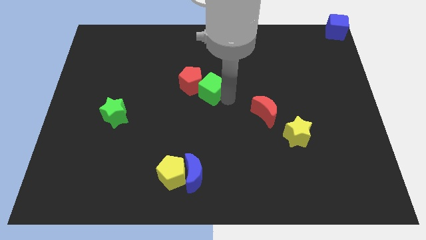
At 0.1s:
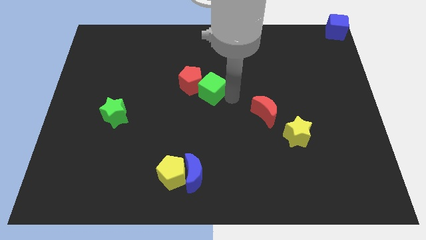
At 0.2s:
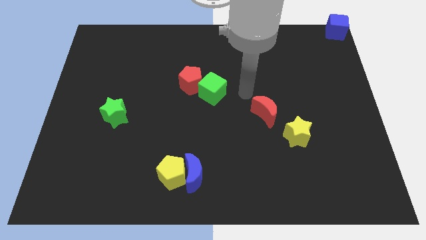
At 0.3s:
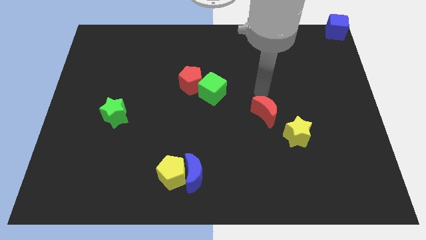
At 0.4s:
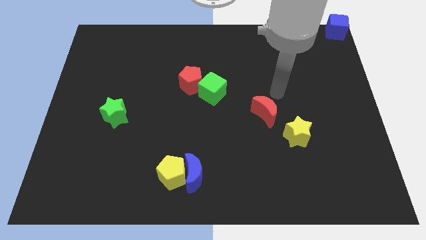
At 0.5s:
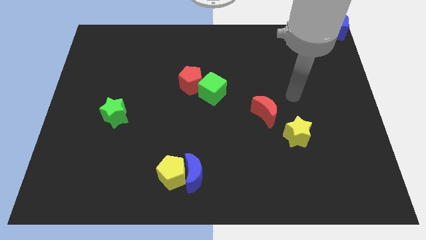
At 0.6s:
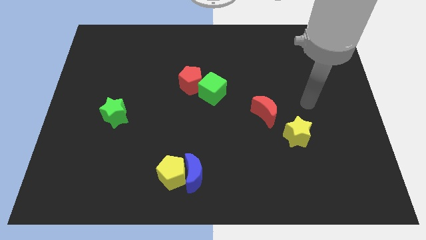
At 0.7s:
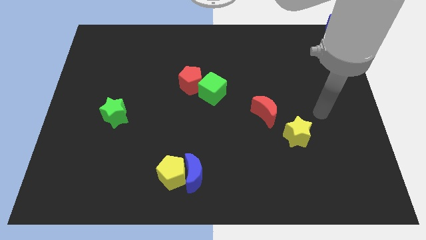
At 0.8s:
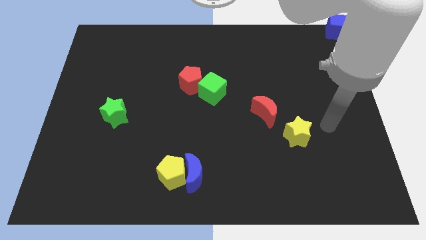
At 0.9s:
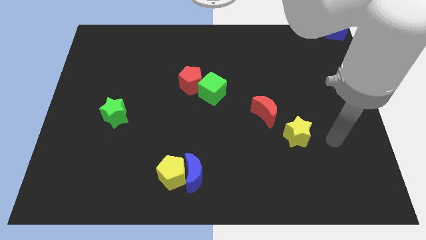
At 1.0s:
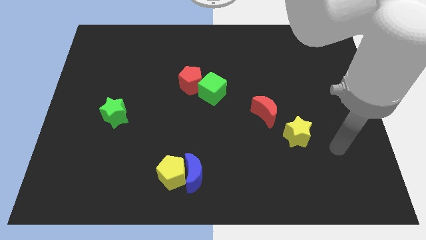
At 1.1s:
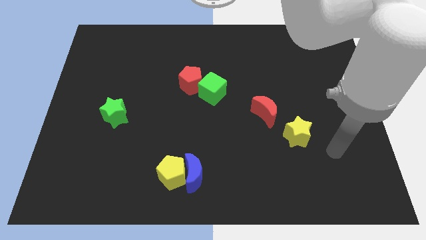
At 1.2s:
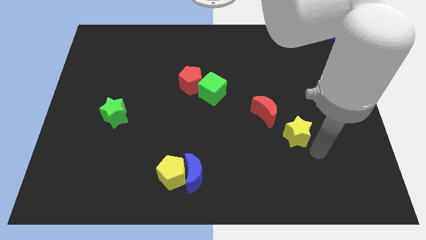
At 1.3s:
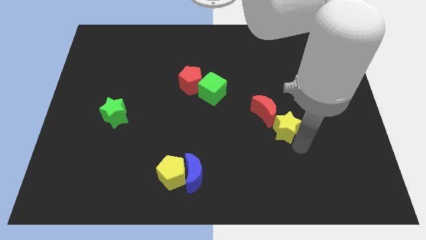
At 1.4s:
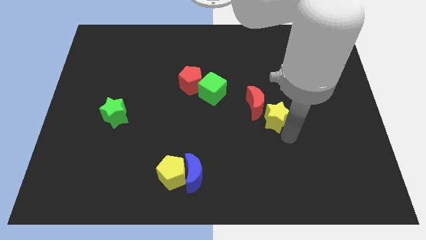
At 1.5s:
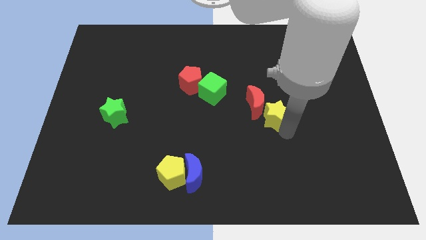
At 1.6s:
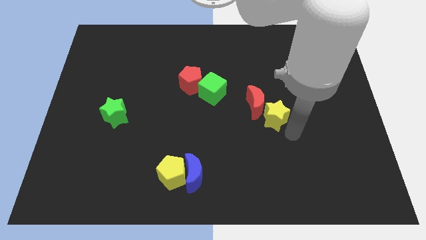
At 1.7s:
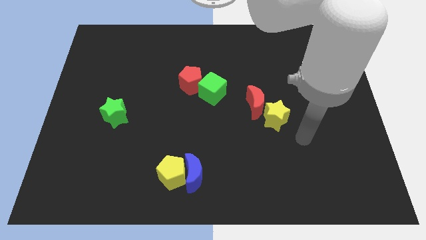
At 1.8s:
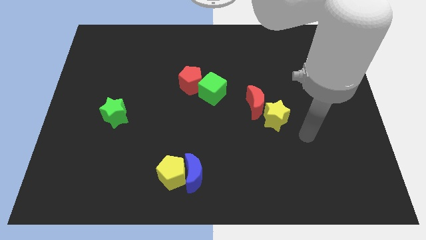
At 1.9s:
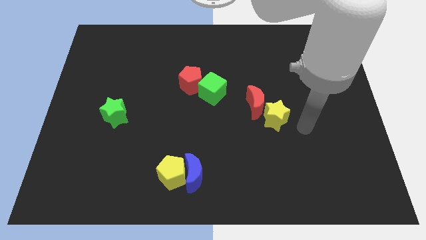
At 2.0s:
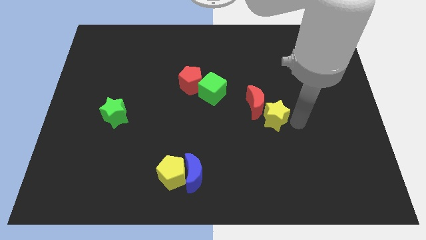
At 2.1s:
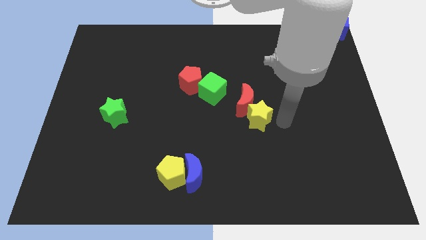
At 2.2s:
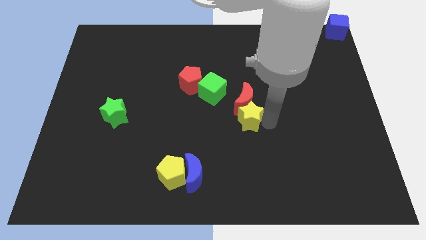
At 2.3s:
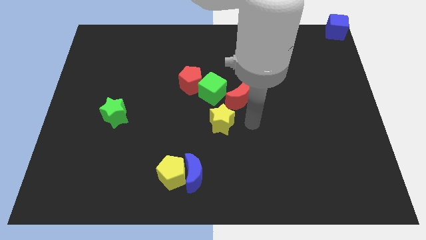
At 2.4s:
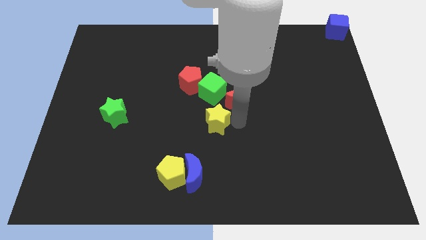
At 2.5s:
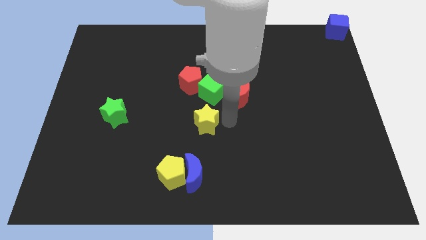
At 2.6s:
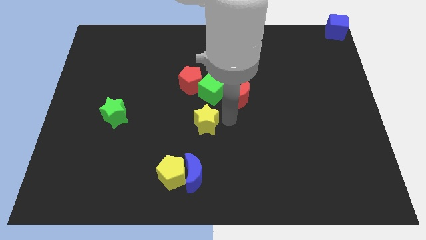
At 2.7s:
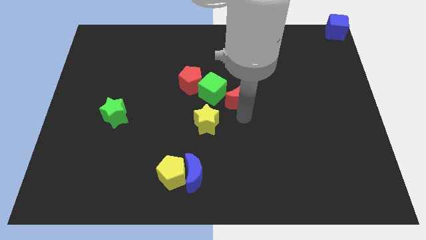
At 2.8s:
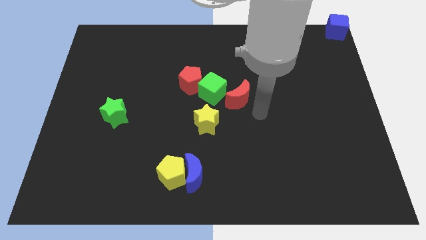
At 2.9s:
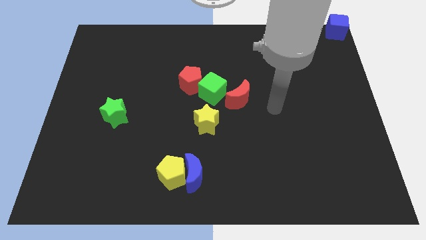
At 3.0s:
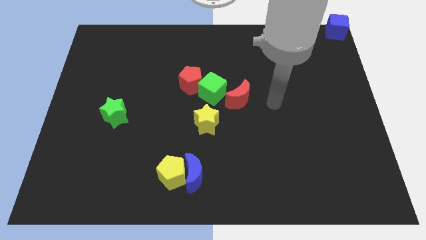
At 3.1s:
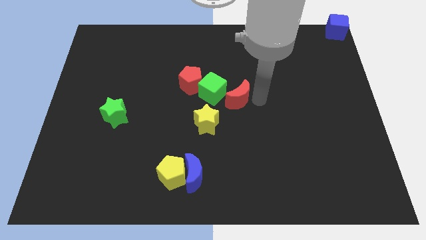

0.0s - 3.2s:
move the yellow star below the green cube

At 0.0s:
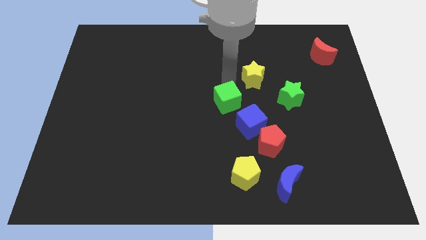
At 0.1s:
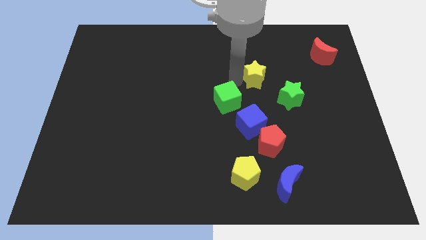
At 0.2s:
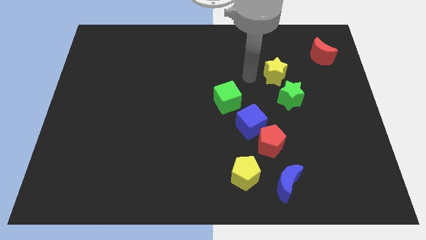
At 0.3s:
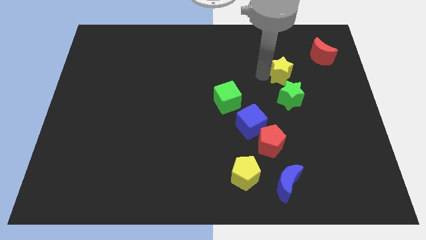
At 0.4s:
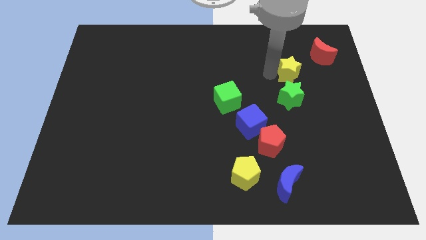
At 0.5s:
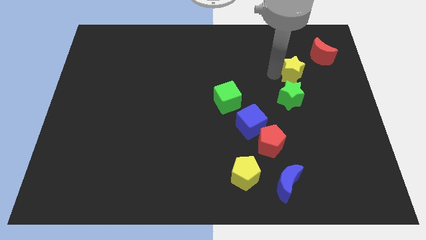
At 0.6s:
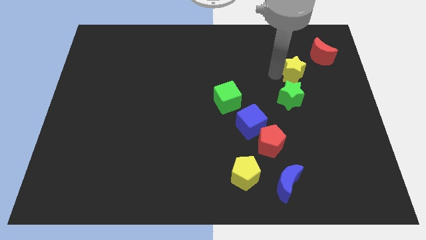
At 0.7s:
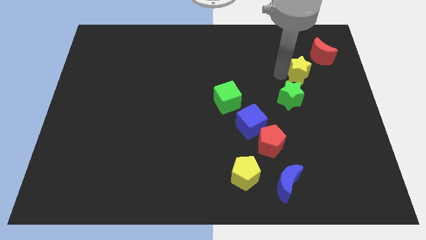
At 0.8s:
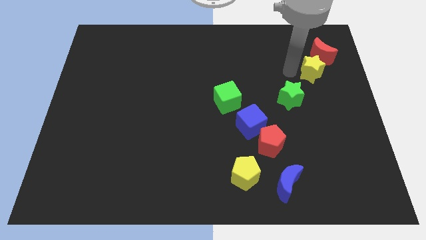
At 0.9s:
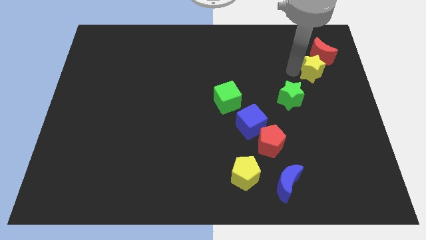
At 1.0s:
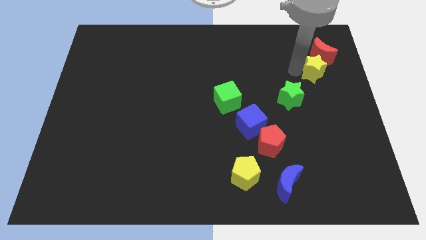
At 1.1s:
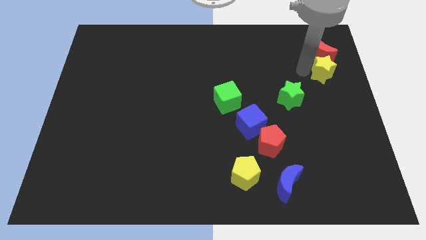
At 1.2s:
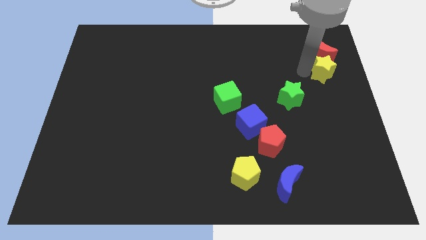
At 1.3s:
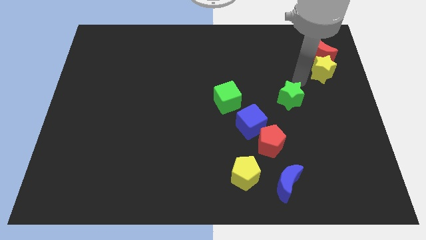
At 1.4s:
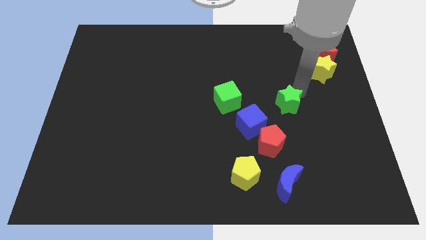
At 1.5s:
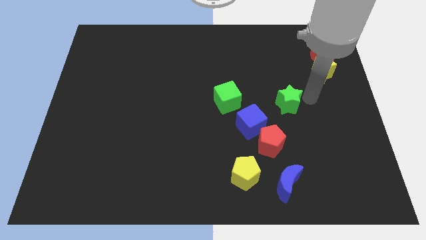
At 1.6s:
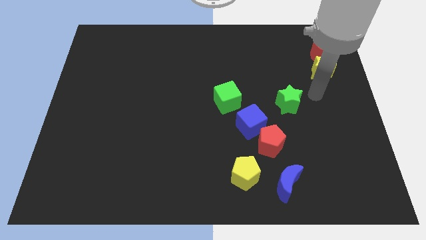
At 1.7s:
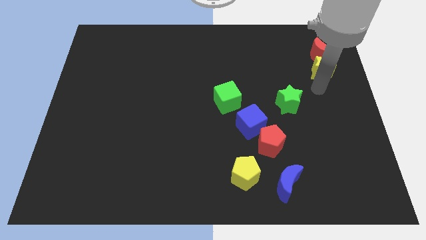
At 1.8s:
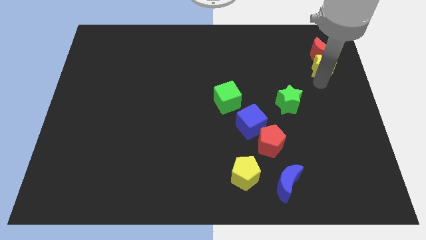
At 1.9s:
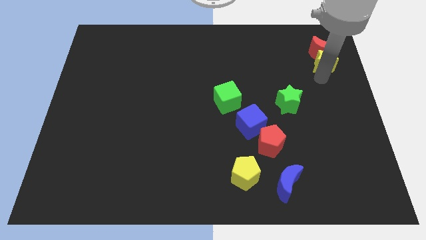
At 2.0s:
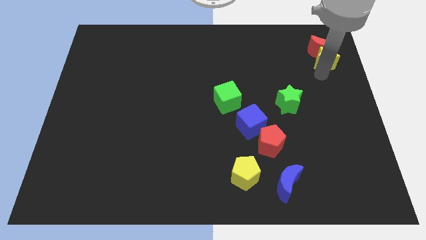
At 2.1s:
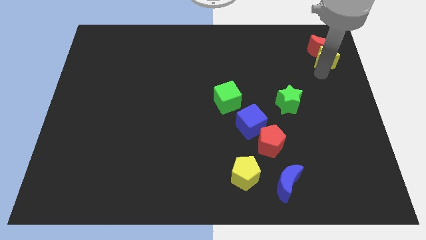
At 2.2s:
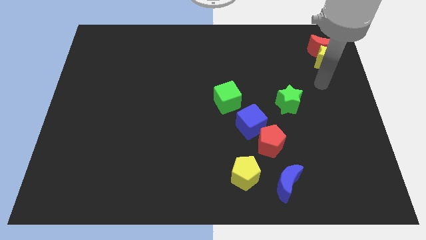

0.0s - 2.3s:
push the yellow star into the red moon

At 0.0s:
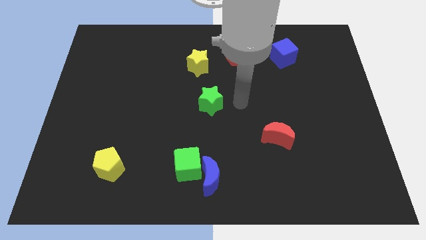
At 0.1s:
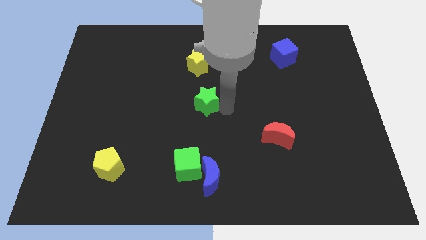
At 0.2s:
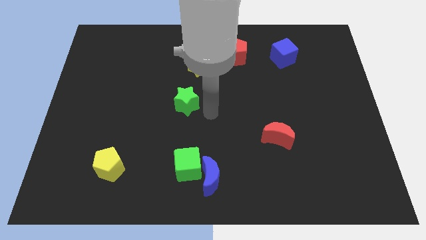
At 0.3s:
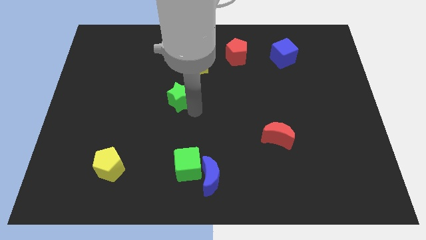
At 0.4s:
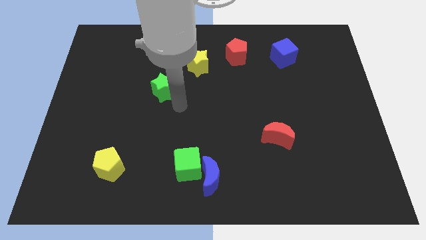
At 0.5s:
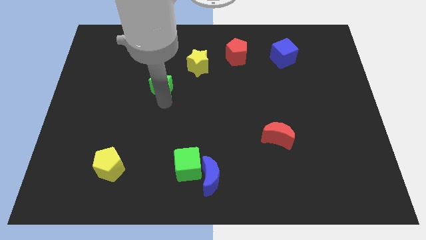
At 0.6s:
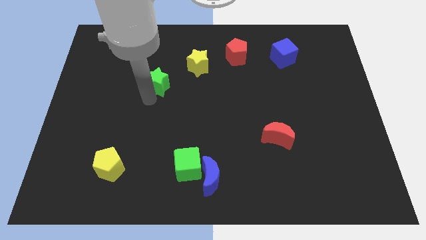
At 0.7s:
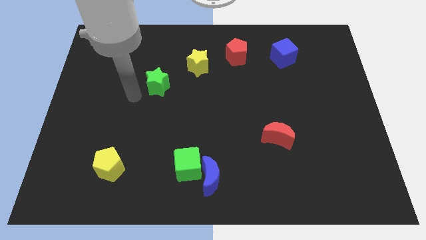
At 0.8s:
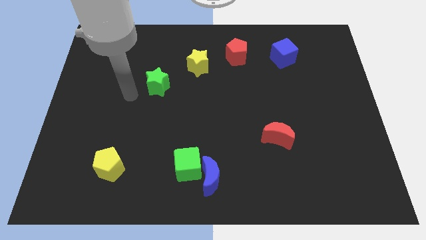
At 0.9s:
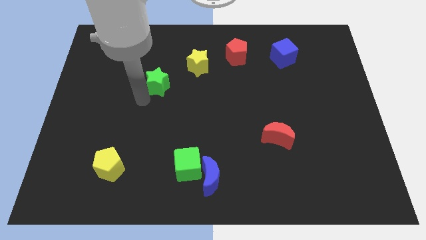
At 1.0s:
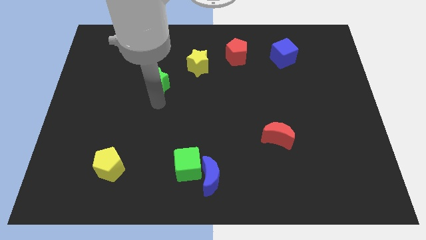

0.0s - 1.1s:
put the green star diagonally left below yellow star

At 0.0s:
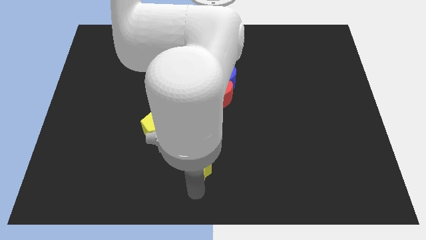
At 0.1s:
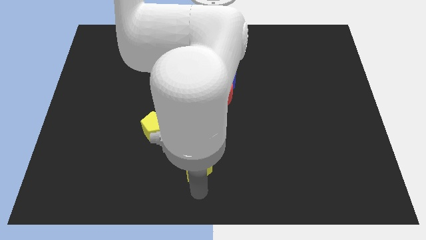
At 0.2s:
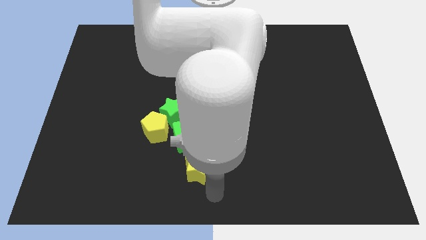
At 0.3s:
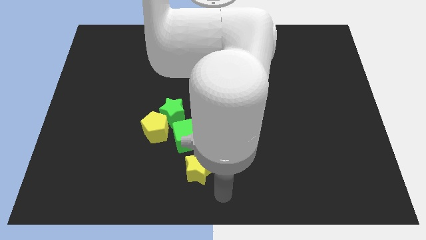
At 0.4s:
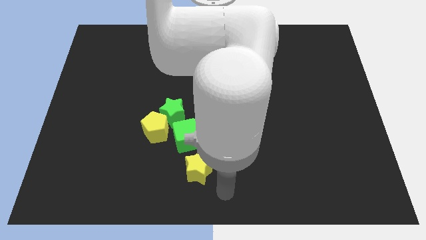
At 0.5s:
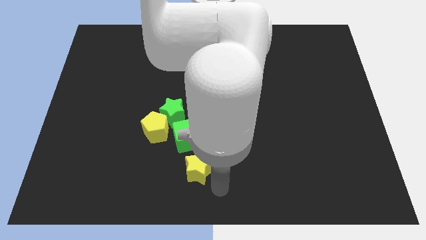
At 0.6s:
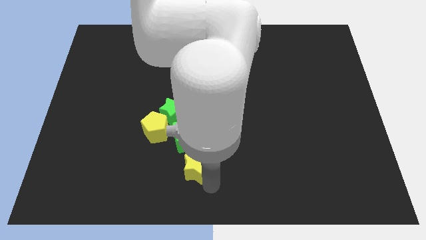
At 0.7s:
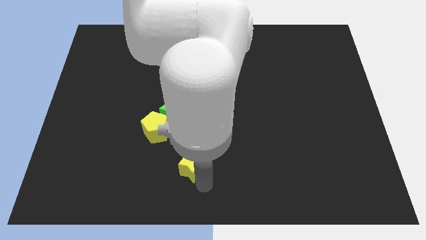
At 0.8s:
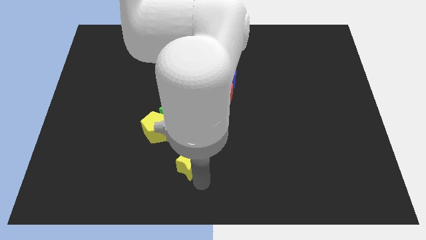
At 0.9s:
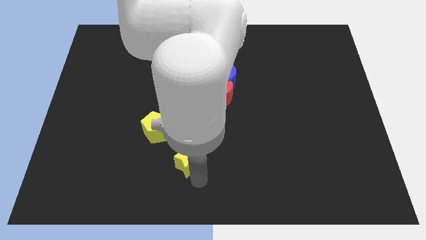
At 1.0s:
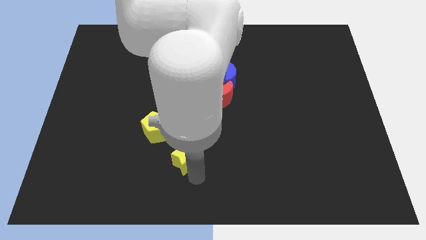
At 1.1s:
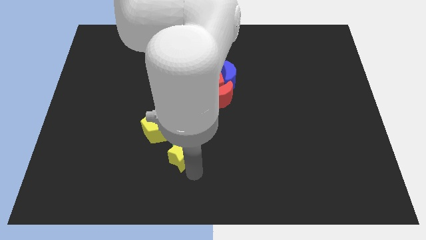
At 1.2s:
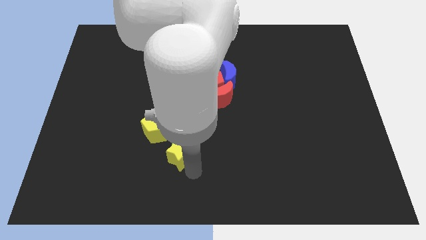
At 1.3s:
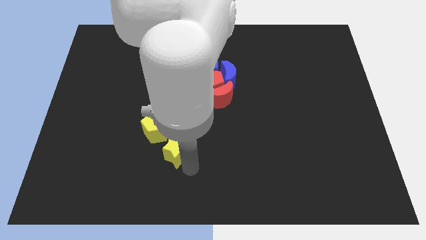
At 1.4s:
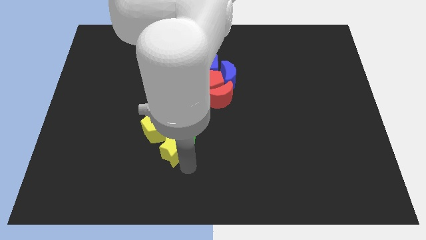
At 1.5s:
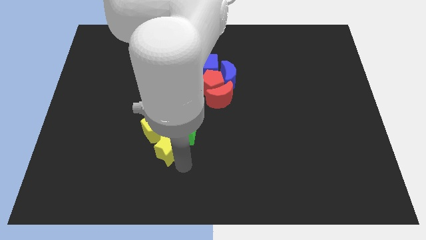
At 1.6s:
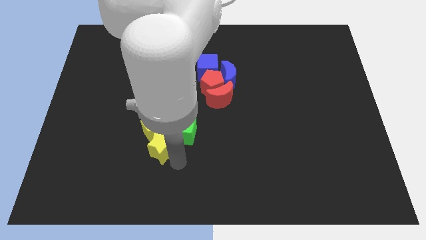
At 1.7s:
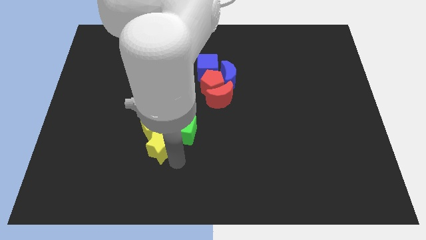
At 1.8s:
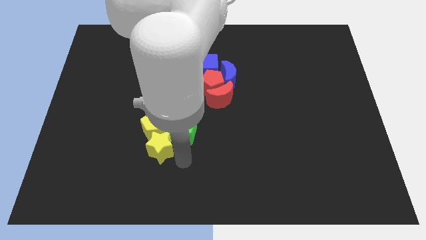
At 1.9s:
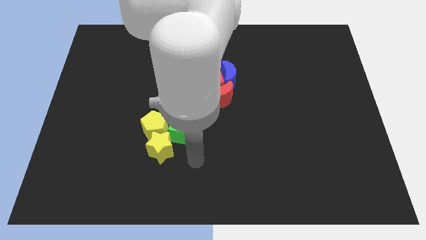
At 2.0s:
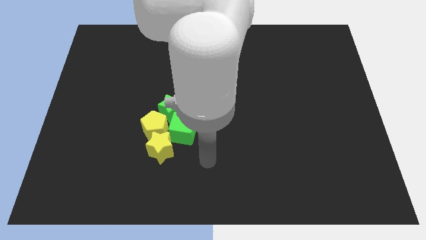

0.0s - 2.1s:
push yellow star into yellow pentagon

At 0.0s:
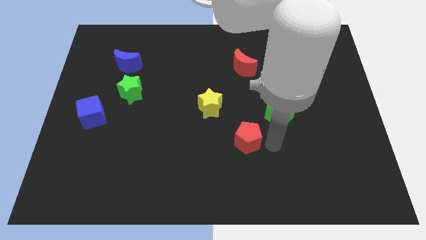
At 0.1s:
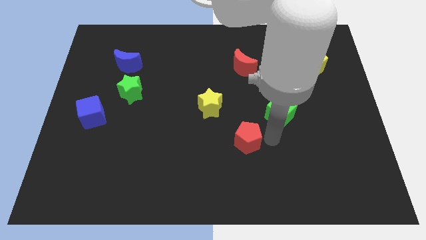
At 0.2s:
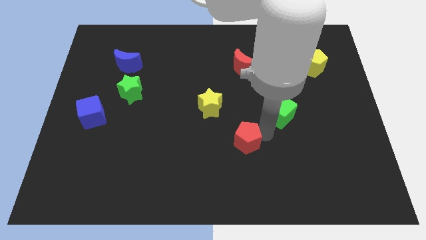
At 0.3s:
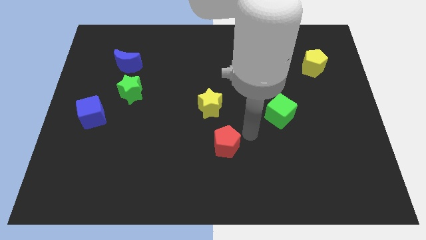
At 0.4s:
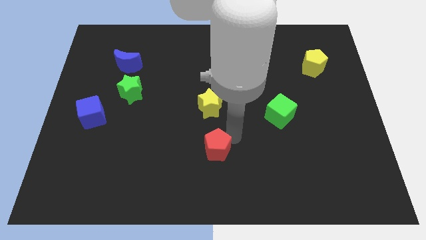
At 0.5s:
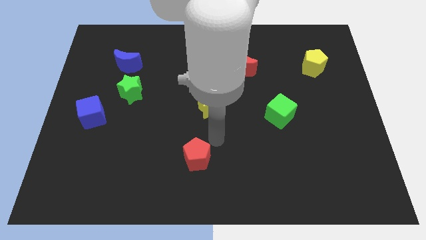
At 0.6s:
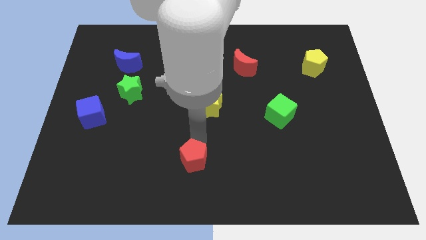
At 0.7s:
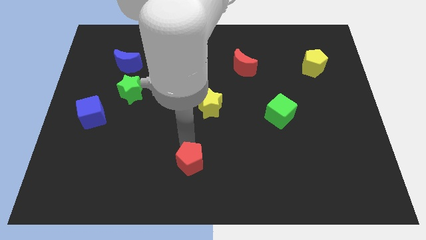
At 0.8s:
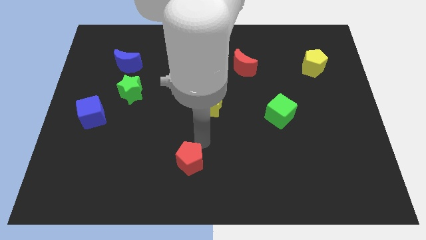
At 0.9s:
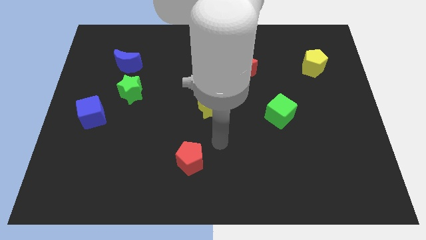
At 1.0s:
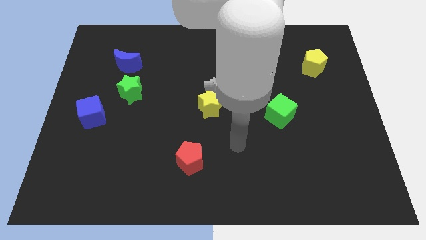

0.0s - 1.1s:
push the red pentagon diagonal to the right of green star
